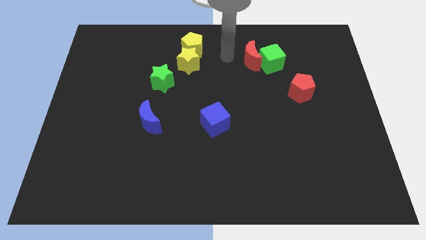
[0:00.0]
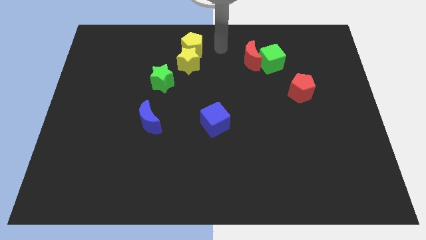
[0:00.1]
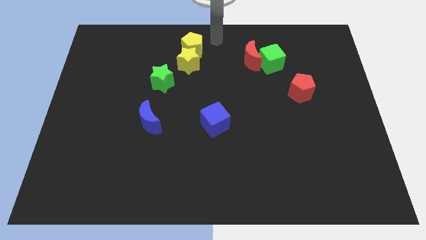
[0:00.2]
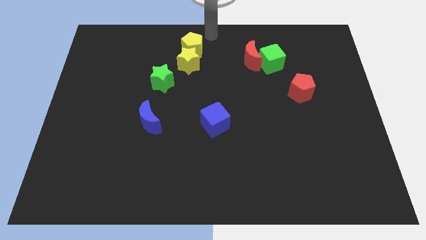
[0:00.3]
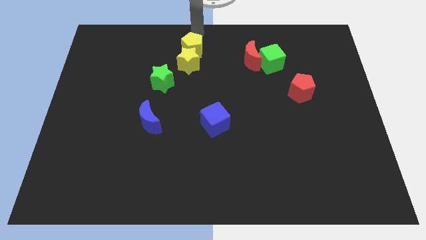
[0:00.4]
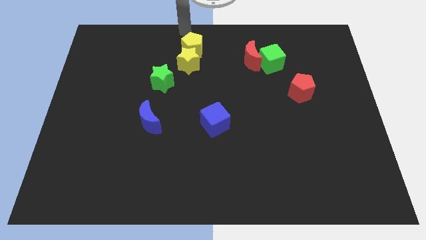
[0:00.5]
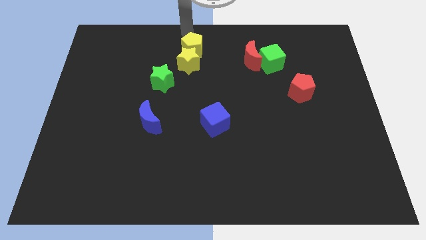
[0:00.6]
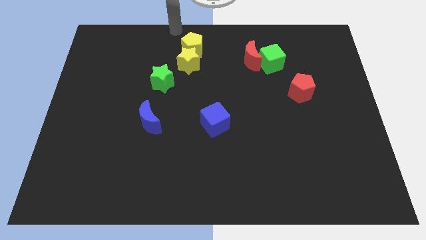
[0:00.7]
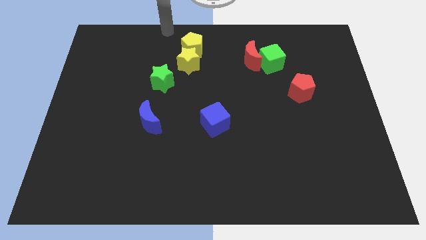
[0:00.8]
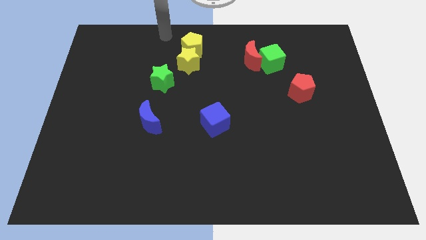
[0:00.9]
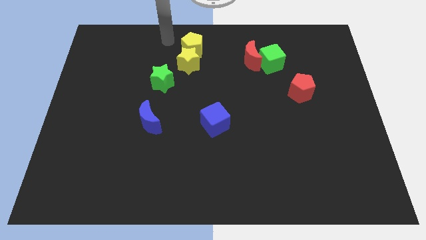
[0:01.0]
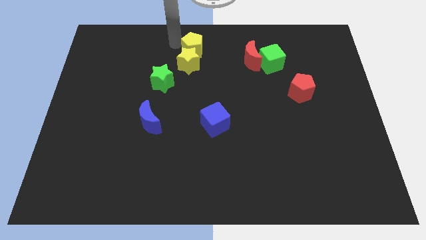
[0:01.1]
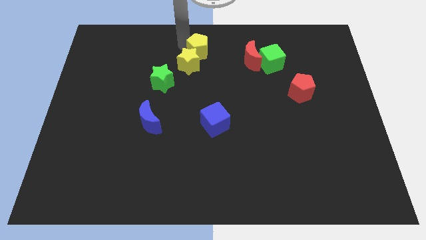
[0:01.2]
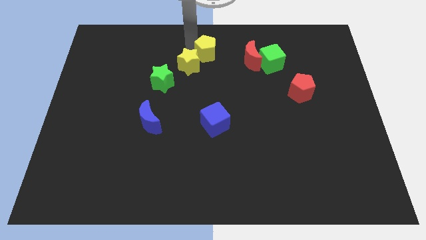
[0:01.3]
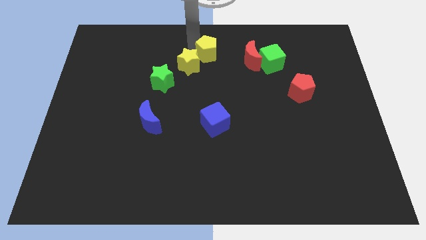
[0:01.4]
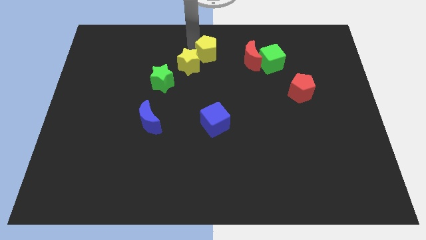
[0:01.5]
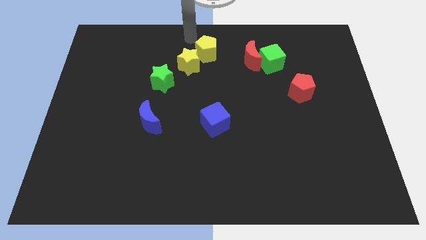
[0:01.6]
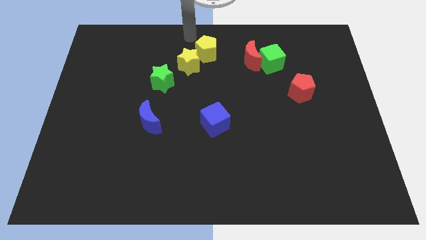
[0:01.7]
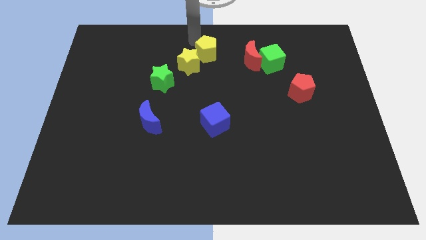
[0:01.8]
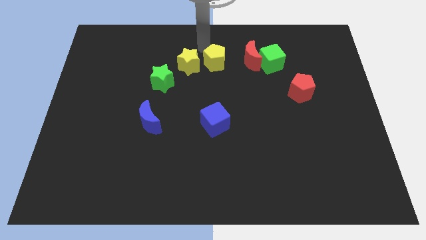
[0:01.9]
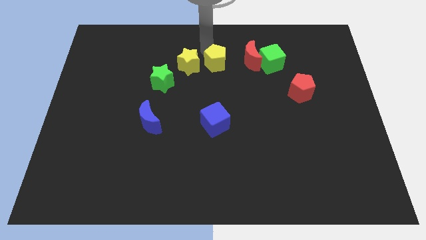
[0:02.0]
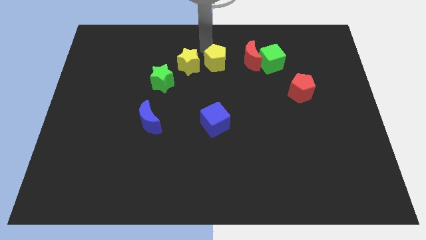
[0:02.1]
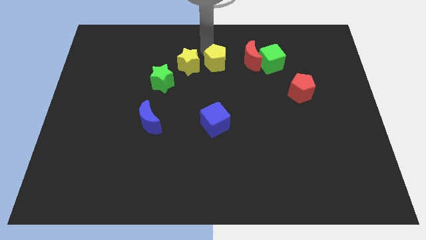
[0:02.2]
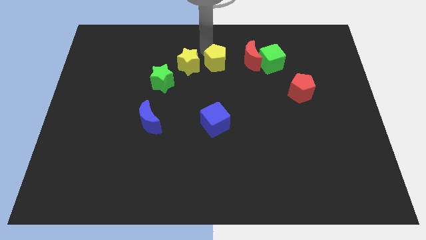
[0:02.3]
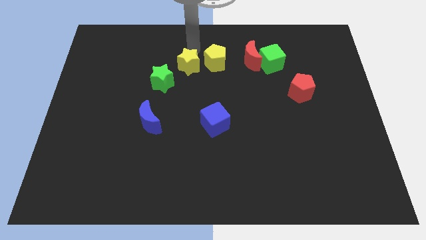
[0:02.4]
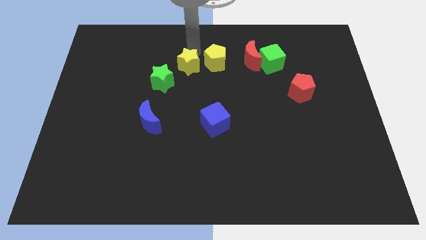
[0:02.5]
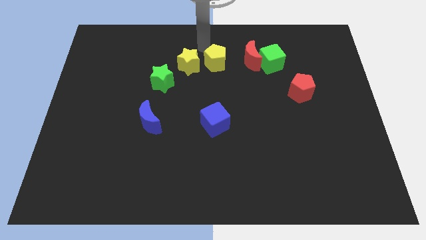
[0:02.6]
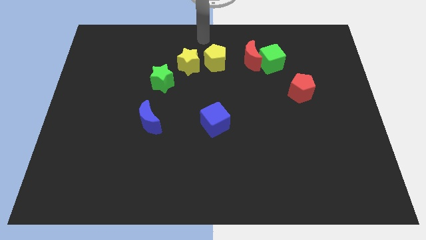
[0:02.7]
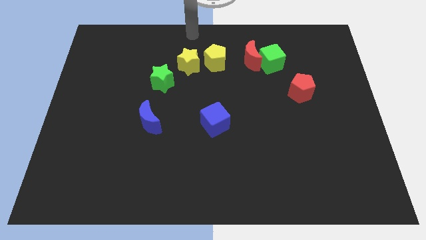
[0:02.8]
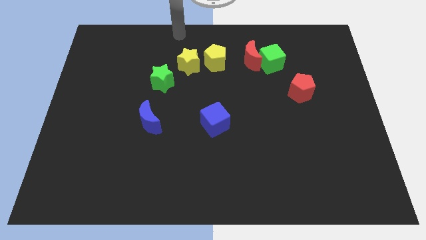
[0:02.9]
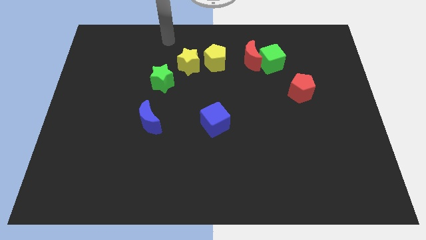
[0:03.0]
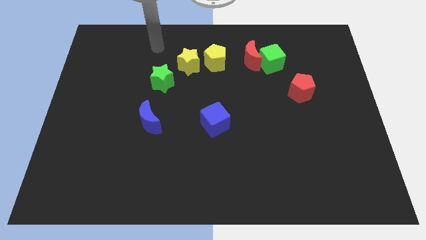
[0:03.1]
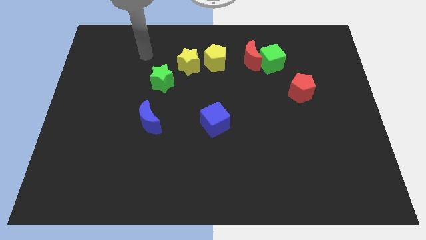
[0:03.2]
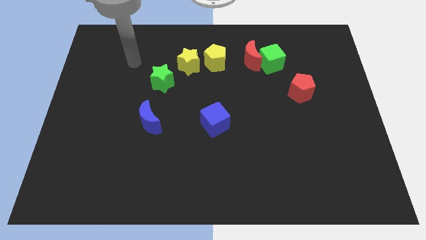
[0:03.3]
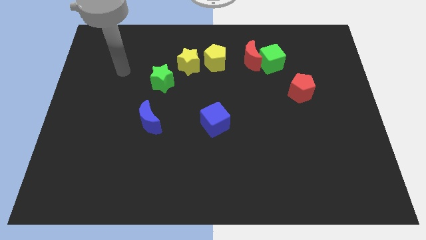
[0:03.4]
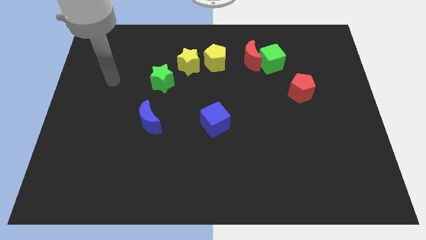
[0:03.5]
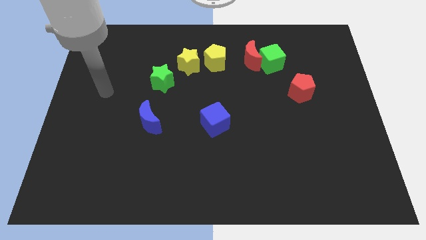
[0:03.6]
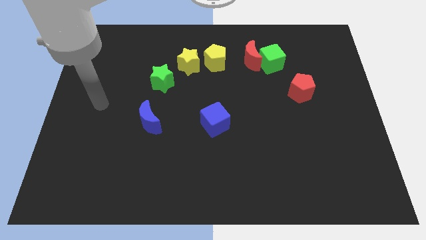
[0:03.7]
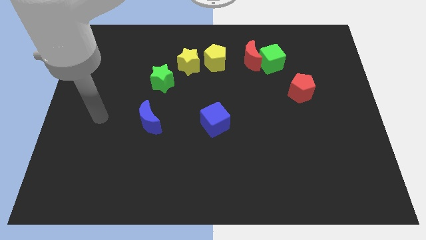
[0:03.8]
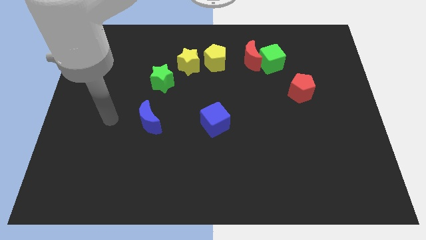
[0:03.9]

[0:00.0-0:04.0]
move the yellow pentagon to the right of the yellow star

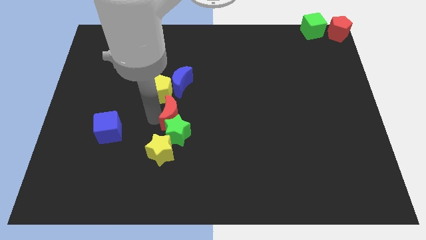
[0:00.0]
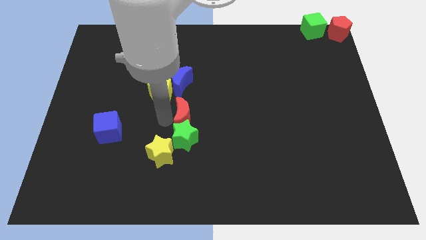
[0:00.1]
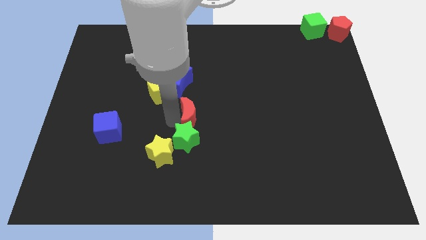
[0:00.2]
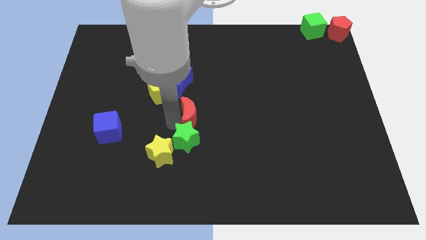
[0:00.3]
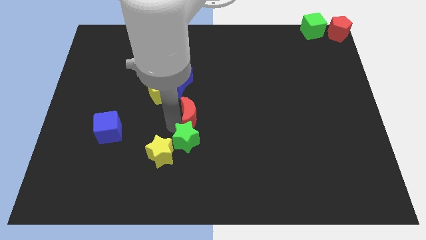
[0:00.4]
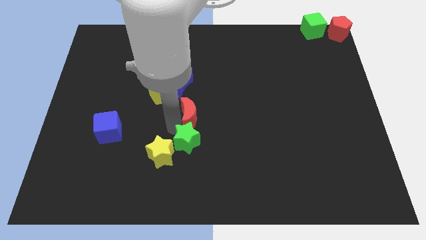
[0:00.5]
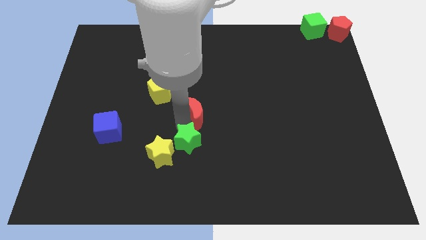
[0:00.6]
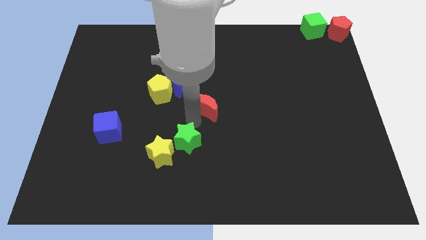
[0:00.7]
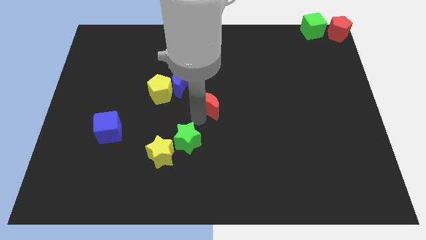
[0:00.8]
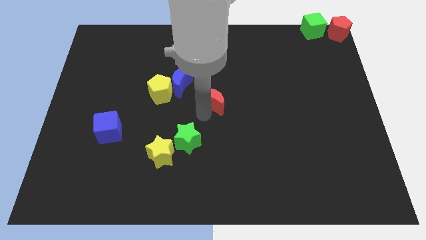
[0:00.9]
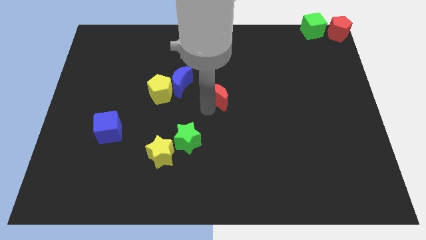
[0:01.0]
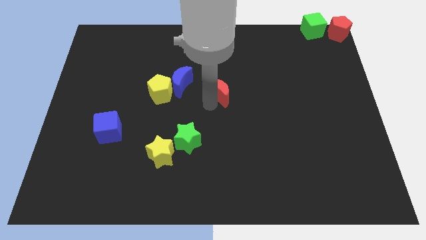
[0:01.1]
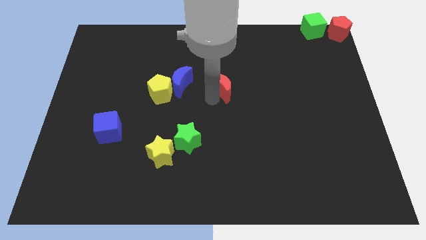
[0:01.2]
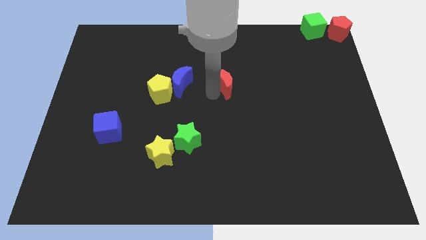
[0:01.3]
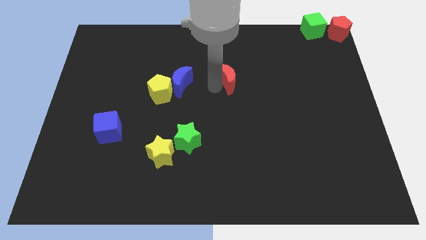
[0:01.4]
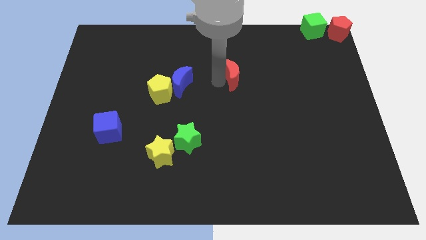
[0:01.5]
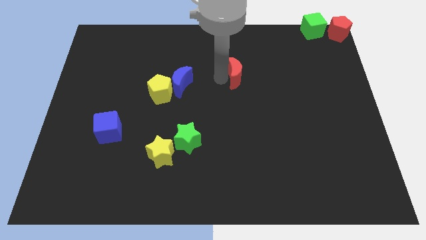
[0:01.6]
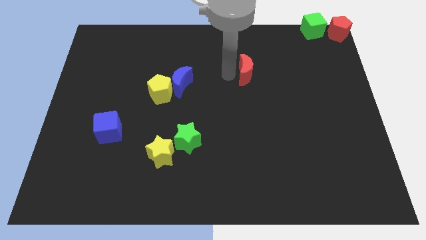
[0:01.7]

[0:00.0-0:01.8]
push the red crescent towards the top right

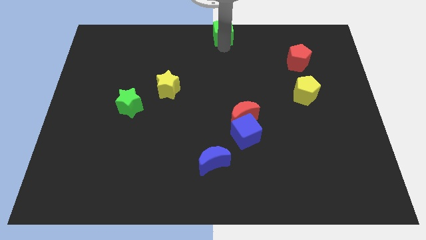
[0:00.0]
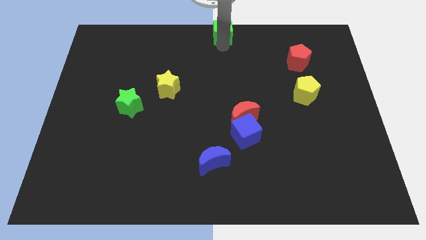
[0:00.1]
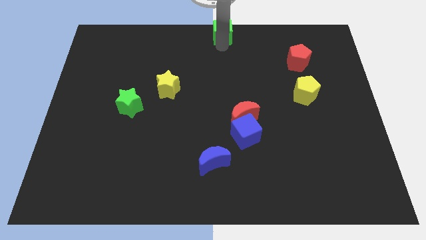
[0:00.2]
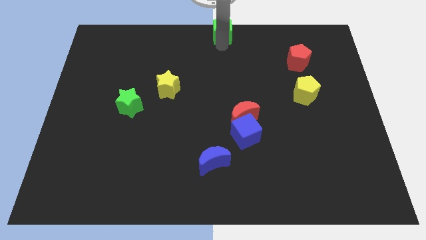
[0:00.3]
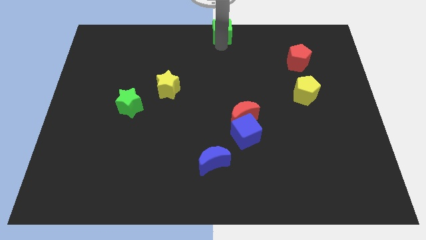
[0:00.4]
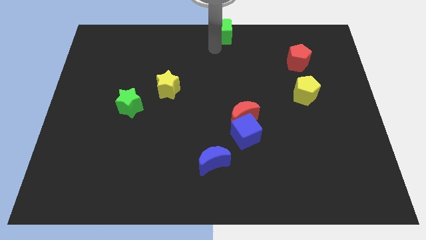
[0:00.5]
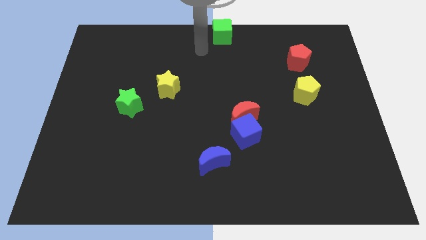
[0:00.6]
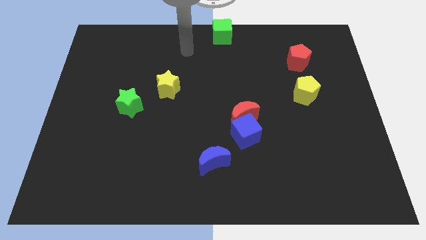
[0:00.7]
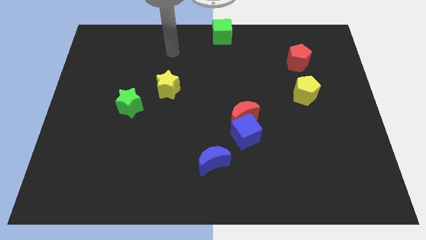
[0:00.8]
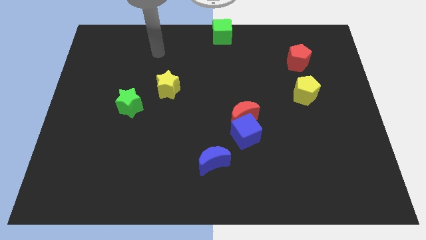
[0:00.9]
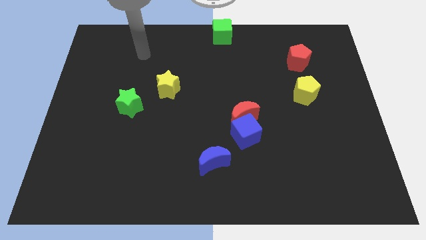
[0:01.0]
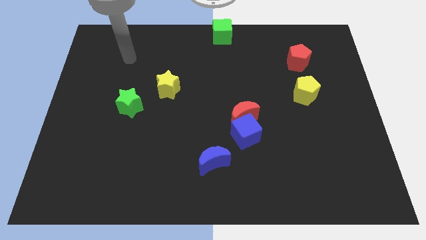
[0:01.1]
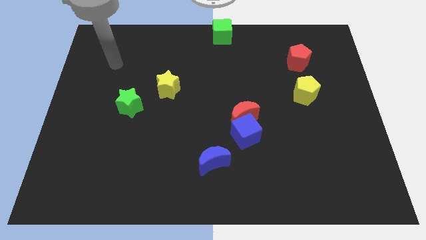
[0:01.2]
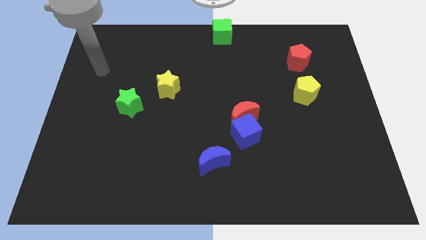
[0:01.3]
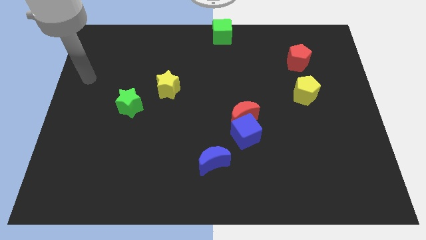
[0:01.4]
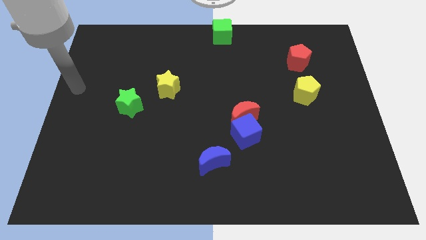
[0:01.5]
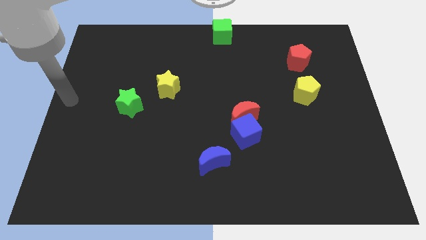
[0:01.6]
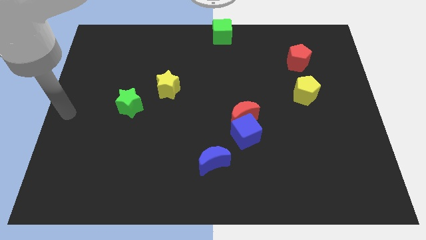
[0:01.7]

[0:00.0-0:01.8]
slide the arm towards the center left of the board

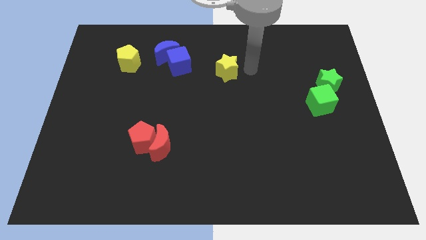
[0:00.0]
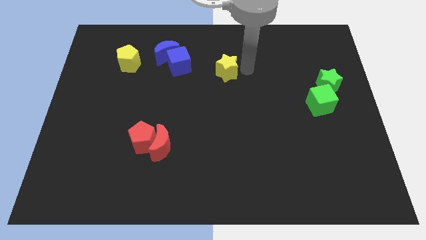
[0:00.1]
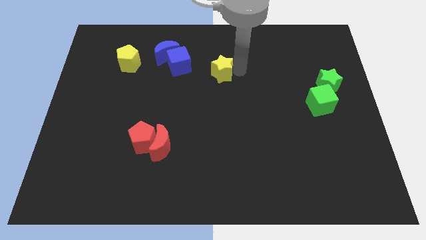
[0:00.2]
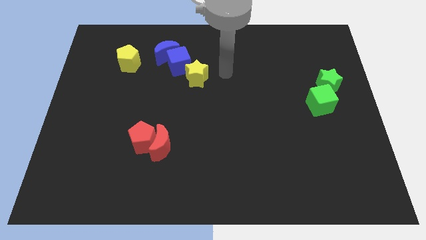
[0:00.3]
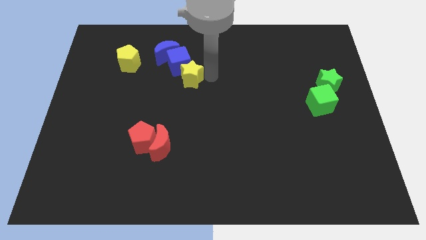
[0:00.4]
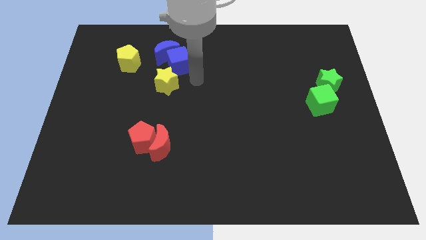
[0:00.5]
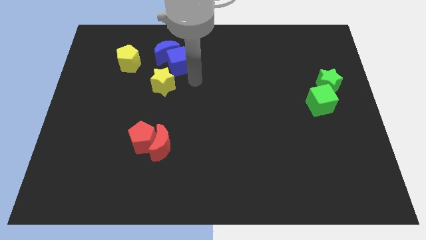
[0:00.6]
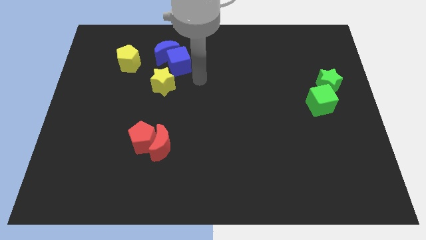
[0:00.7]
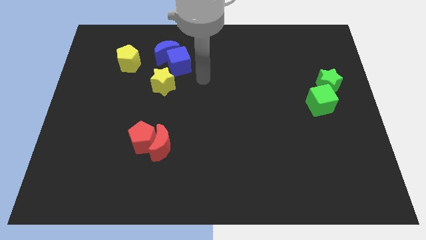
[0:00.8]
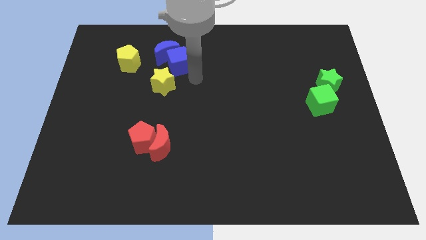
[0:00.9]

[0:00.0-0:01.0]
place the yellow star bottom right to the yellow pentagon

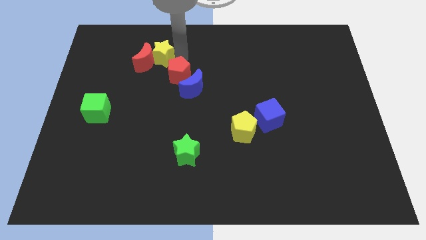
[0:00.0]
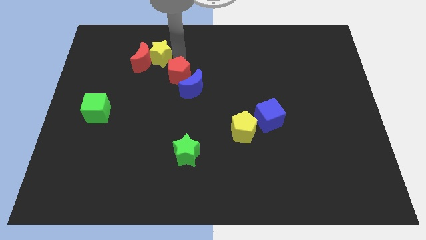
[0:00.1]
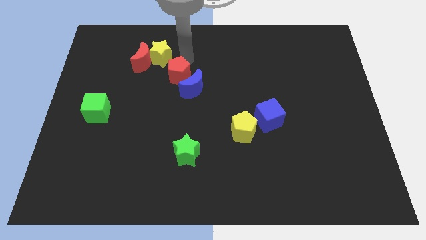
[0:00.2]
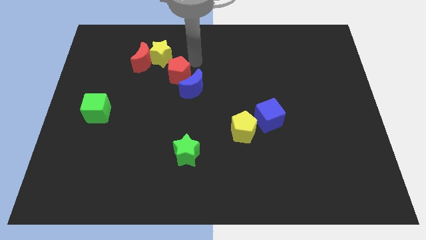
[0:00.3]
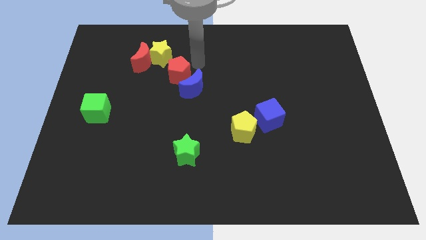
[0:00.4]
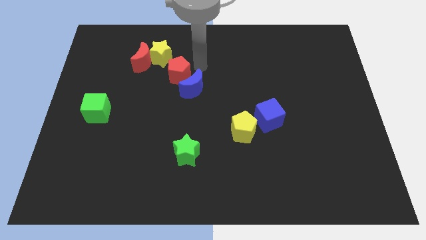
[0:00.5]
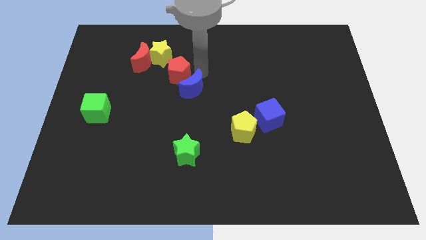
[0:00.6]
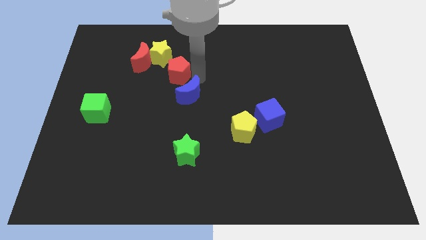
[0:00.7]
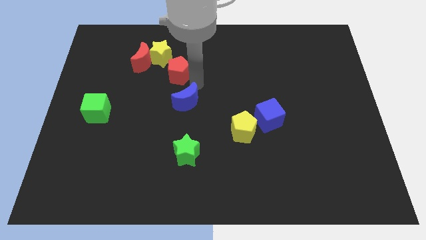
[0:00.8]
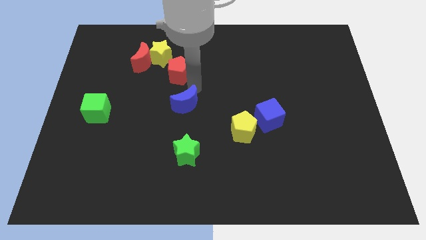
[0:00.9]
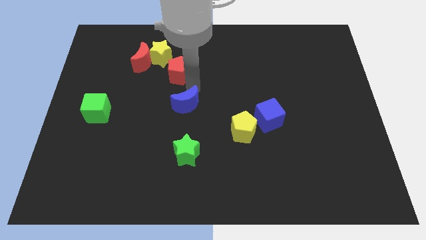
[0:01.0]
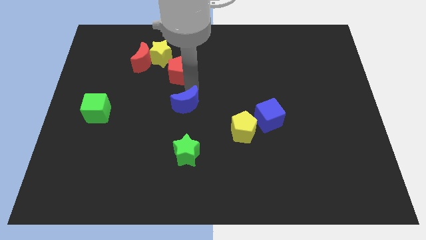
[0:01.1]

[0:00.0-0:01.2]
slightly touch the blue moon
